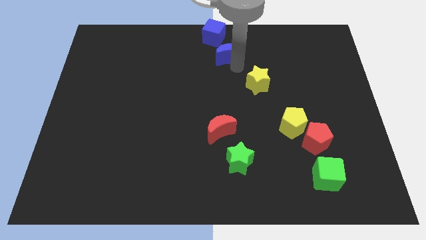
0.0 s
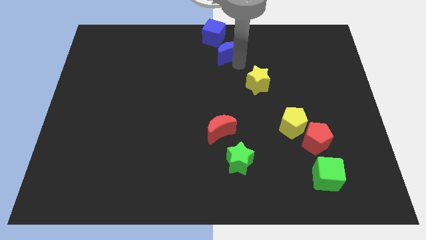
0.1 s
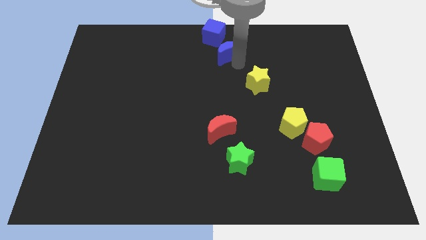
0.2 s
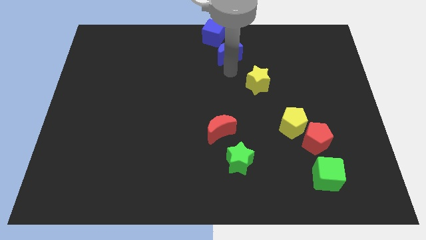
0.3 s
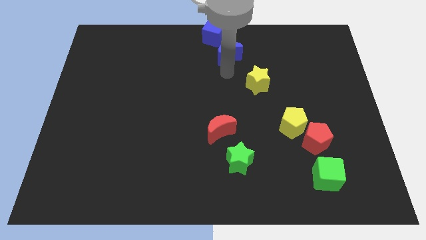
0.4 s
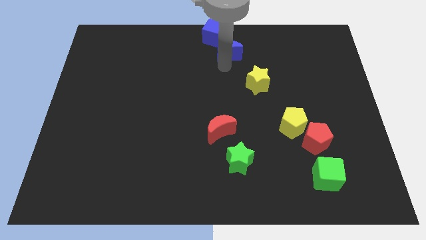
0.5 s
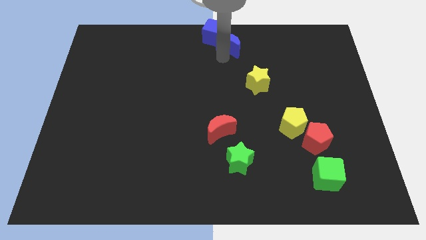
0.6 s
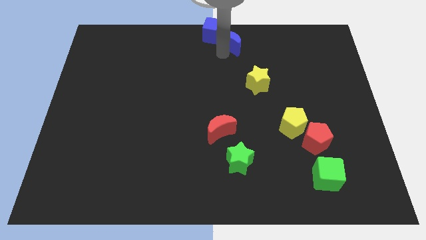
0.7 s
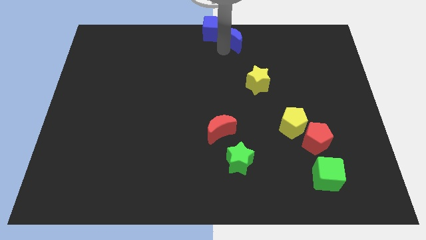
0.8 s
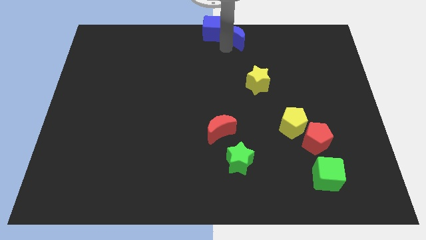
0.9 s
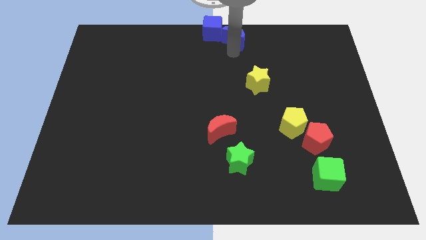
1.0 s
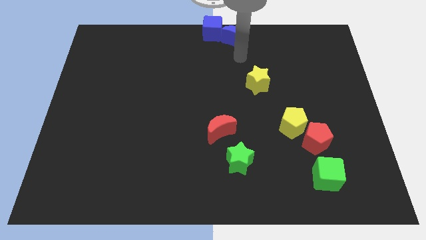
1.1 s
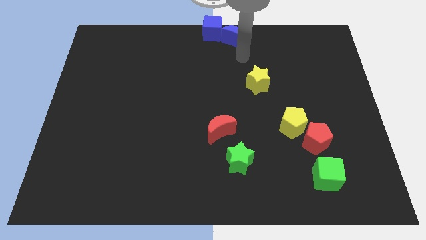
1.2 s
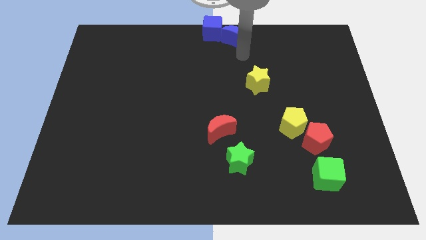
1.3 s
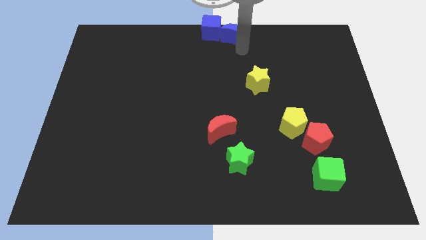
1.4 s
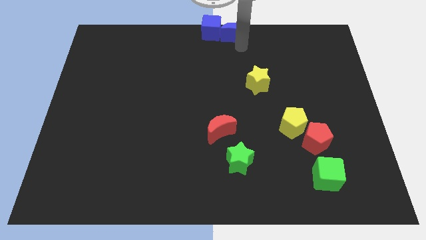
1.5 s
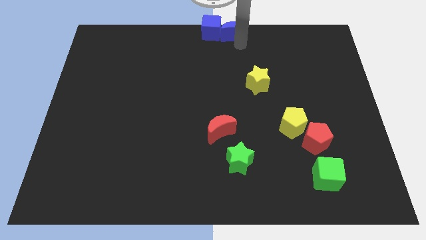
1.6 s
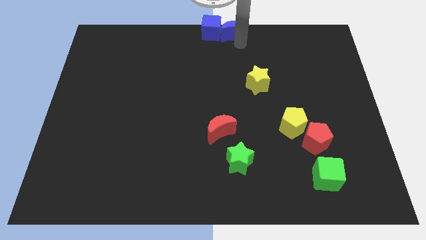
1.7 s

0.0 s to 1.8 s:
slightly move the blue moon near to the blue cube to the top center side of the board

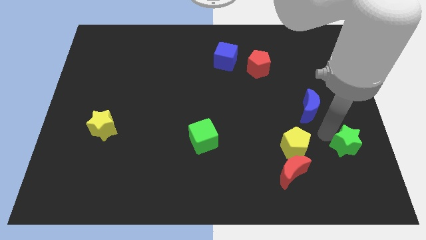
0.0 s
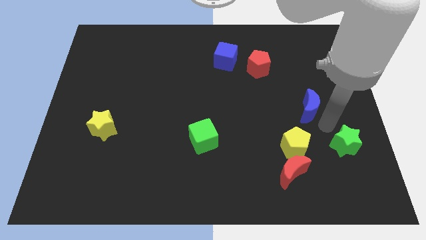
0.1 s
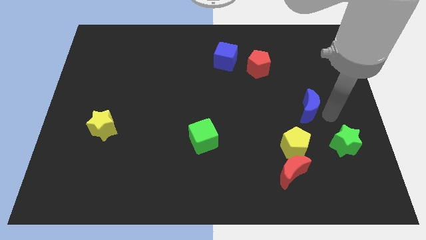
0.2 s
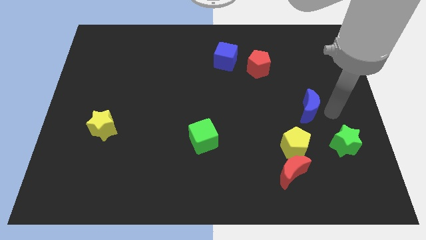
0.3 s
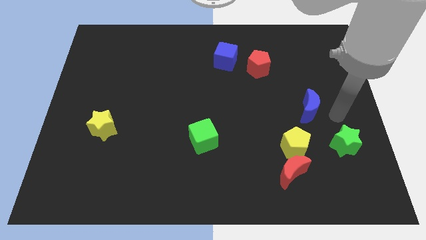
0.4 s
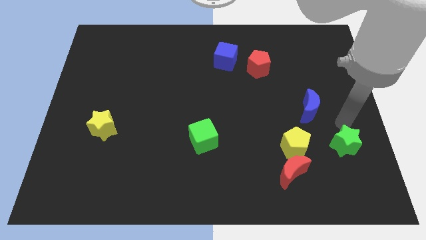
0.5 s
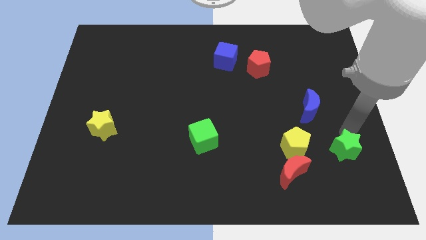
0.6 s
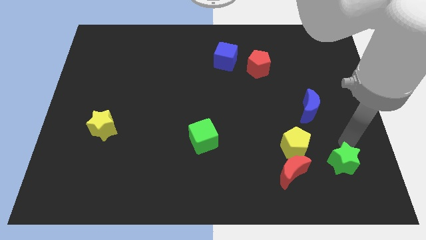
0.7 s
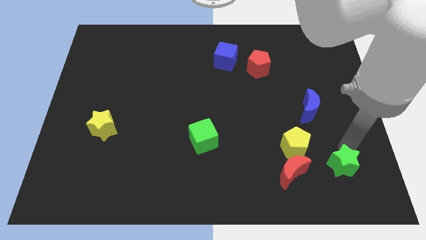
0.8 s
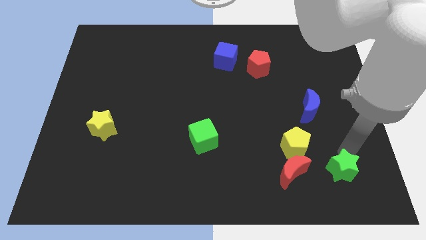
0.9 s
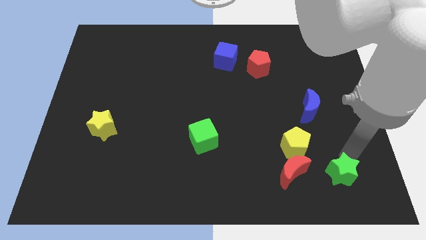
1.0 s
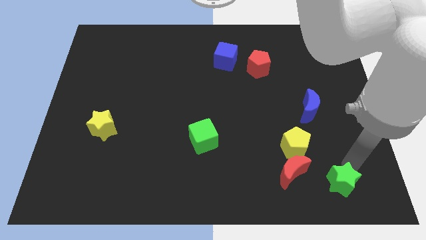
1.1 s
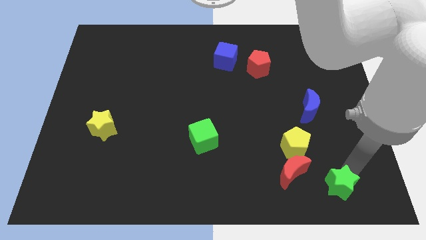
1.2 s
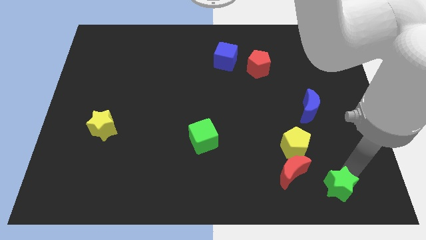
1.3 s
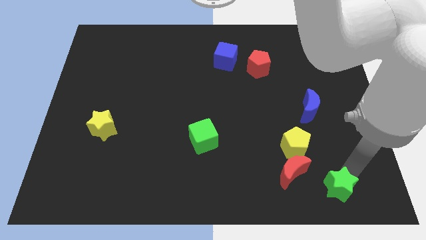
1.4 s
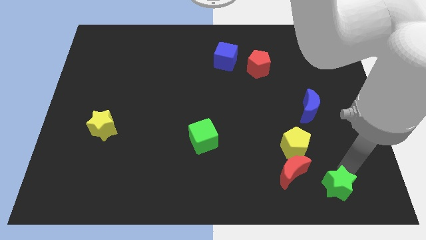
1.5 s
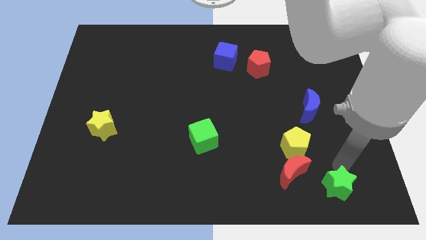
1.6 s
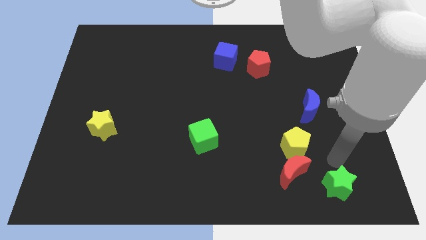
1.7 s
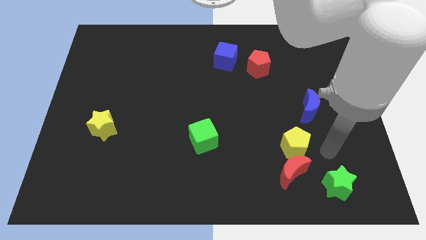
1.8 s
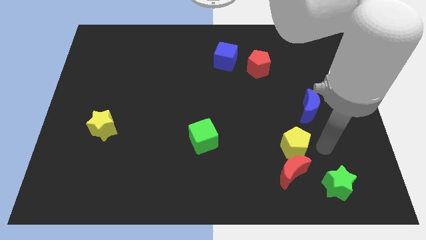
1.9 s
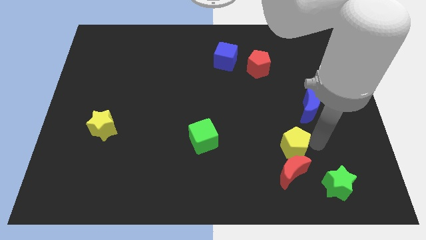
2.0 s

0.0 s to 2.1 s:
push green star towards the bottom of the board

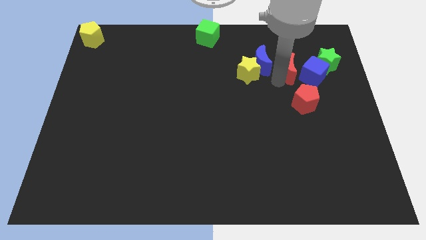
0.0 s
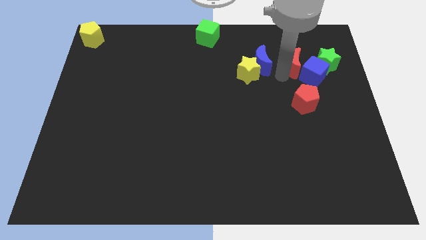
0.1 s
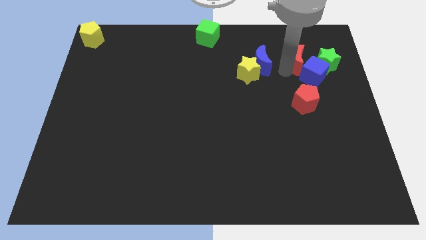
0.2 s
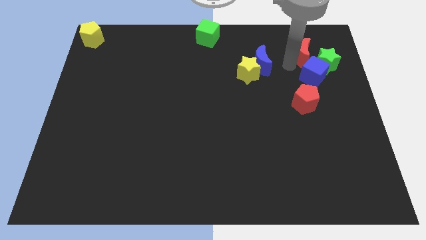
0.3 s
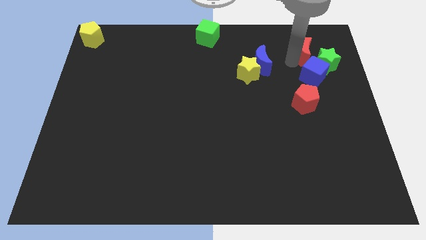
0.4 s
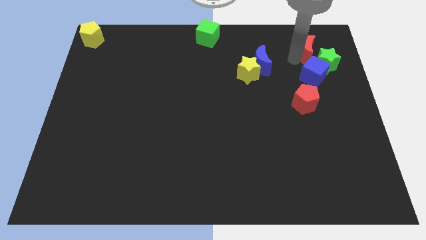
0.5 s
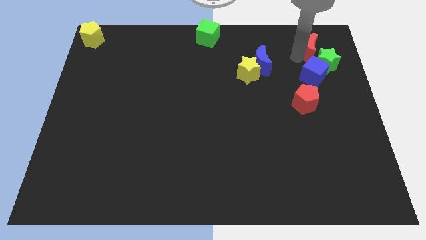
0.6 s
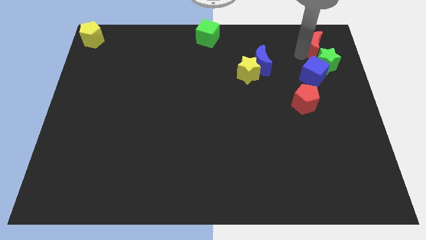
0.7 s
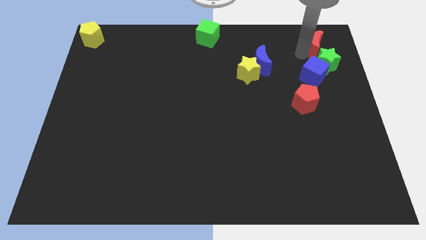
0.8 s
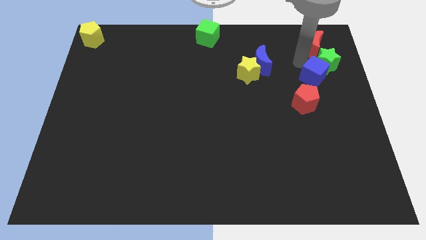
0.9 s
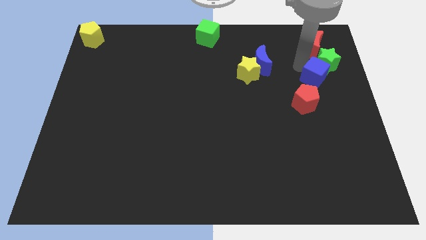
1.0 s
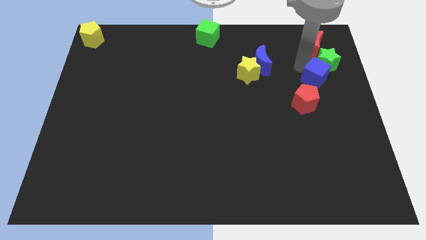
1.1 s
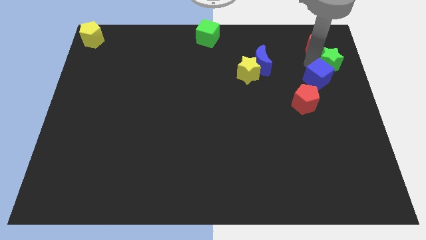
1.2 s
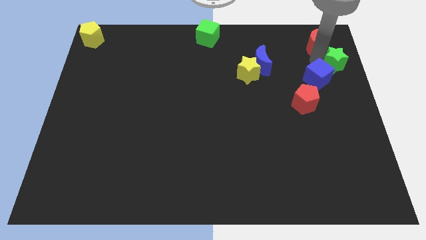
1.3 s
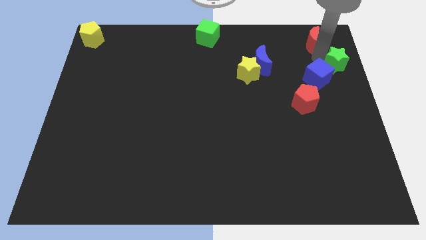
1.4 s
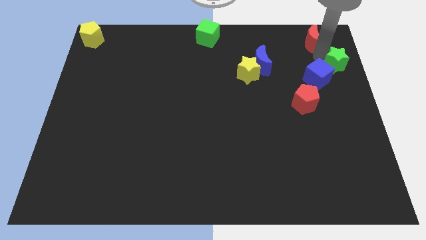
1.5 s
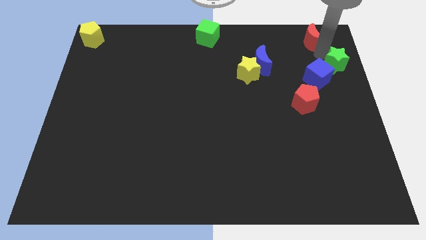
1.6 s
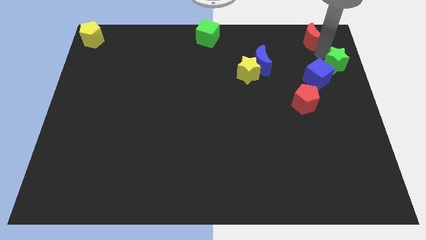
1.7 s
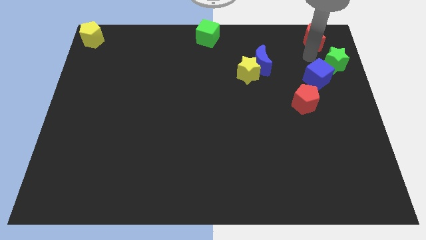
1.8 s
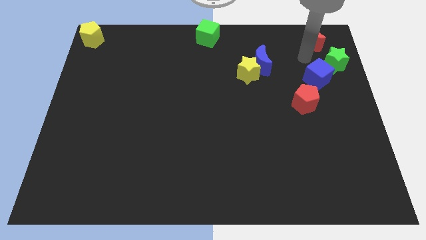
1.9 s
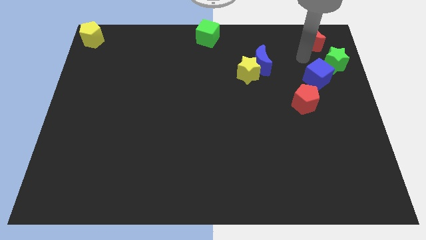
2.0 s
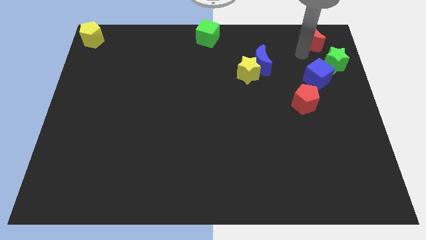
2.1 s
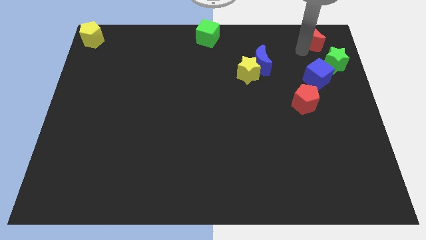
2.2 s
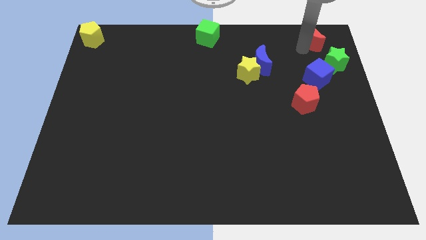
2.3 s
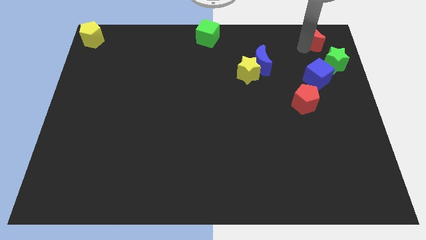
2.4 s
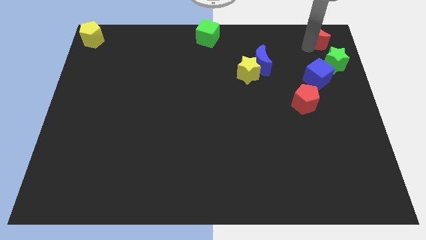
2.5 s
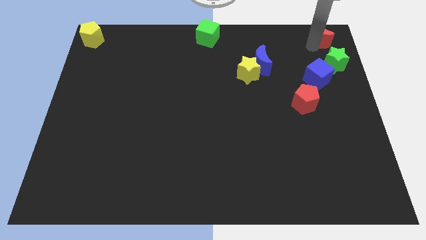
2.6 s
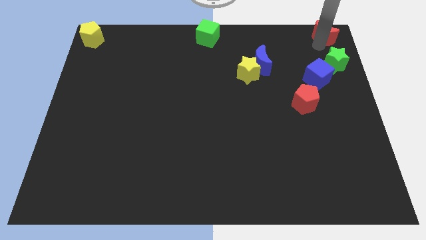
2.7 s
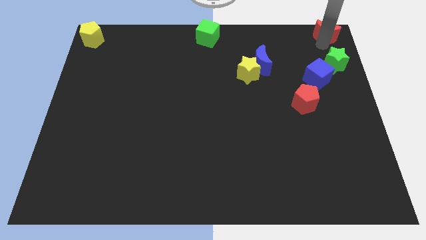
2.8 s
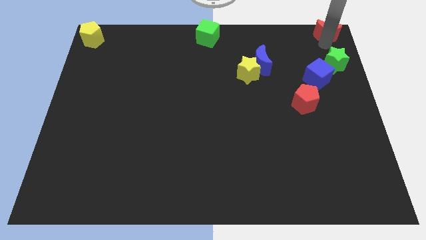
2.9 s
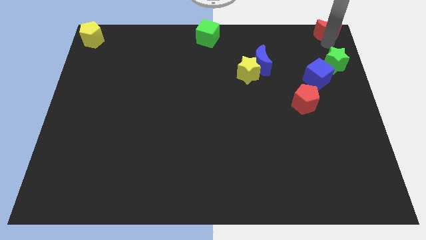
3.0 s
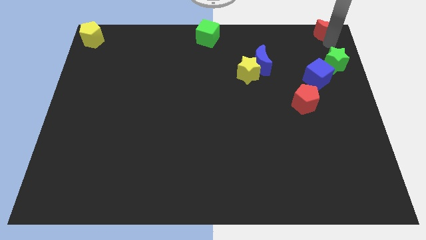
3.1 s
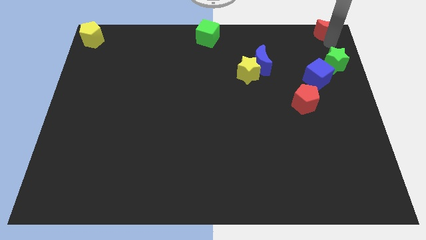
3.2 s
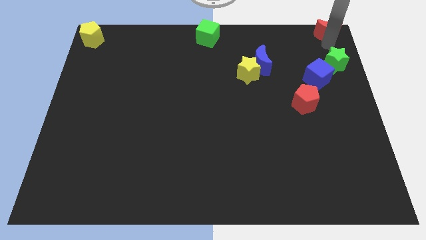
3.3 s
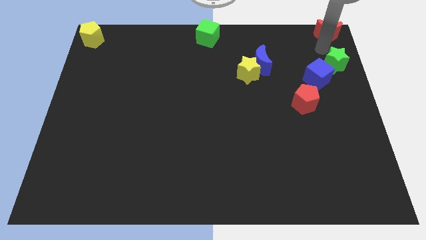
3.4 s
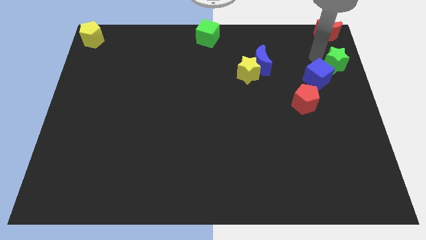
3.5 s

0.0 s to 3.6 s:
push the red crescent to the top right corner of the board

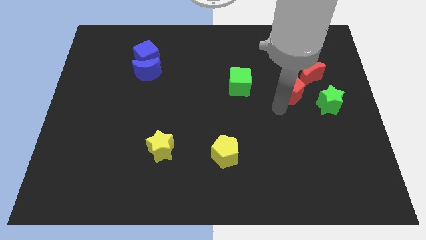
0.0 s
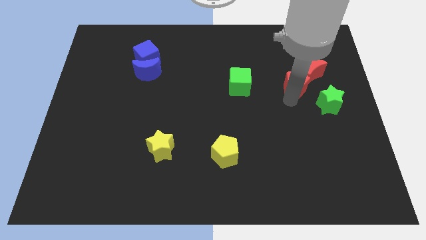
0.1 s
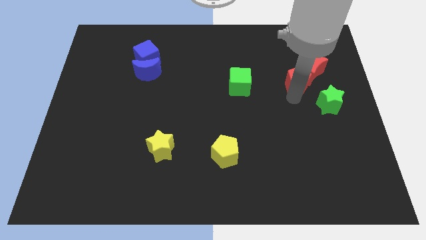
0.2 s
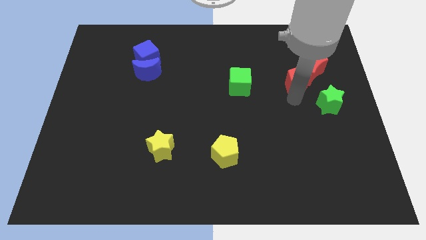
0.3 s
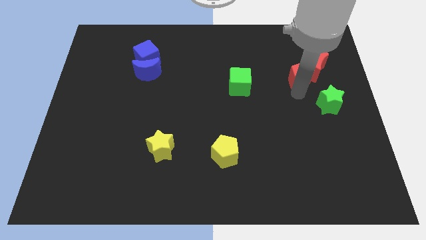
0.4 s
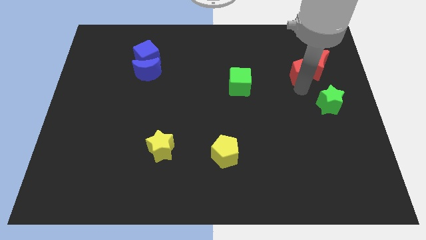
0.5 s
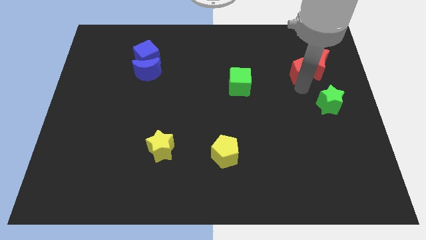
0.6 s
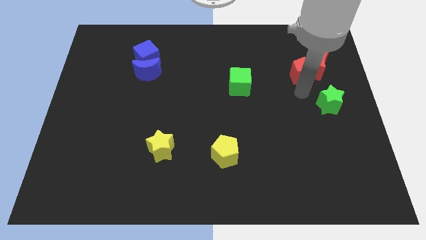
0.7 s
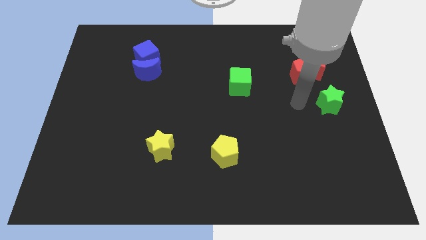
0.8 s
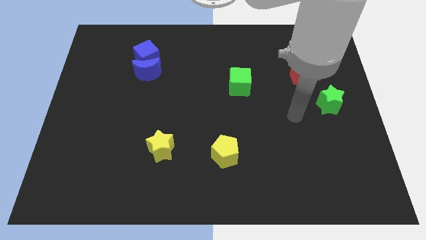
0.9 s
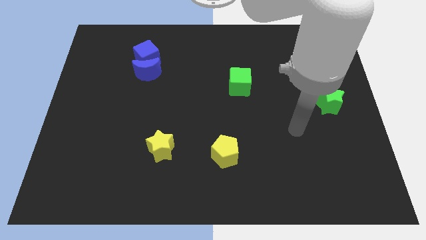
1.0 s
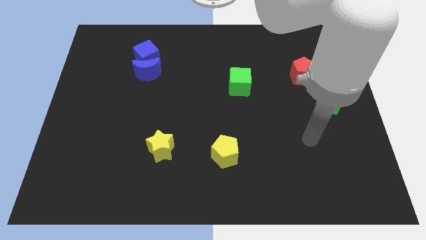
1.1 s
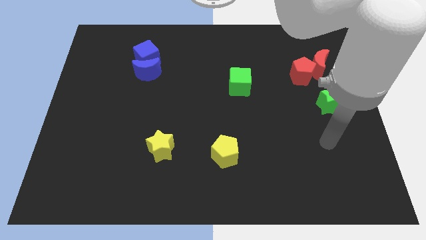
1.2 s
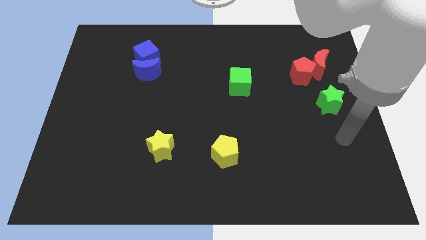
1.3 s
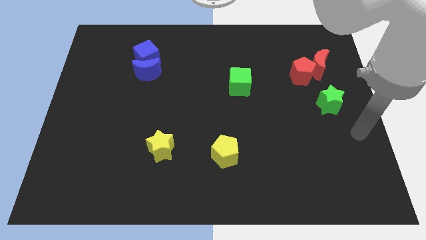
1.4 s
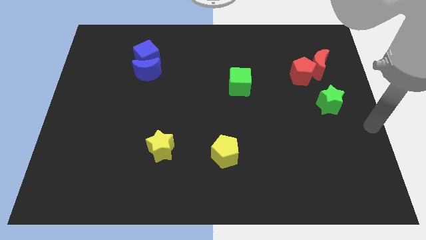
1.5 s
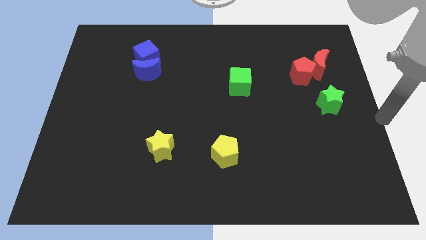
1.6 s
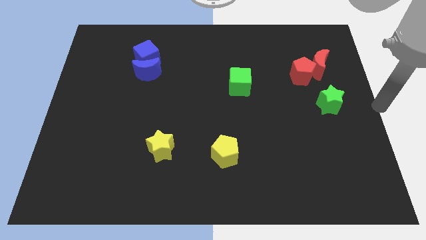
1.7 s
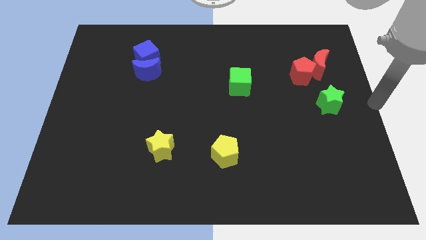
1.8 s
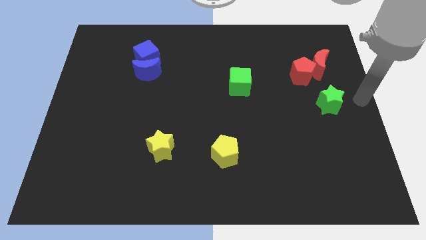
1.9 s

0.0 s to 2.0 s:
move the red moon above the green star
